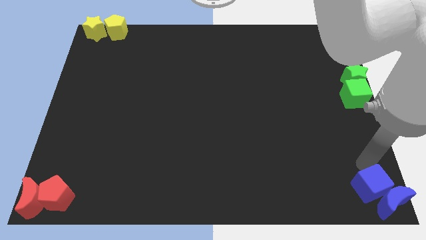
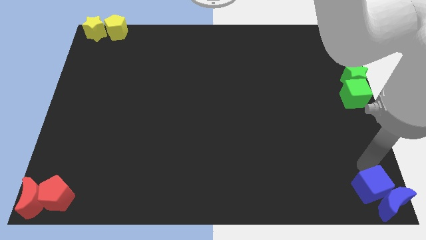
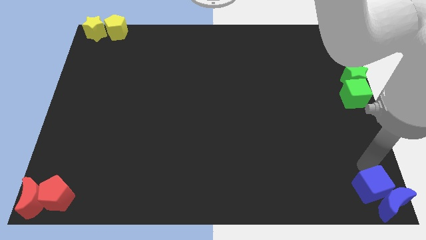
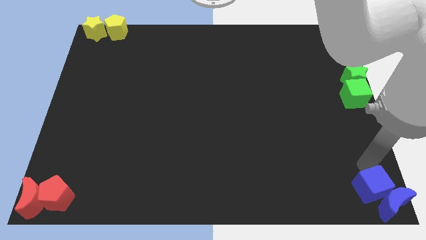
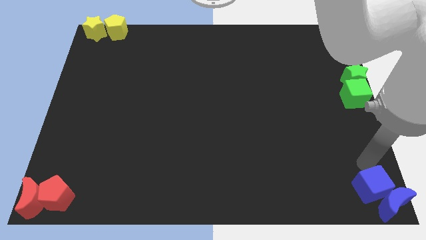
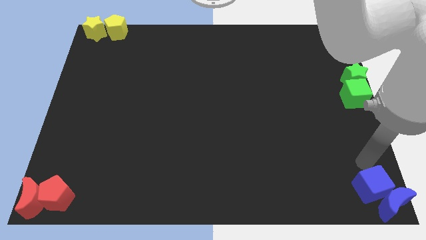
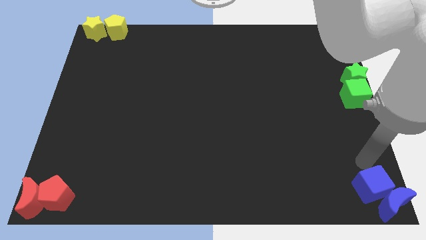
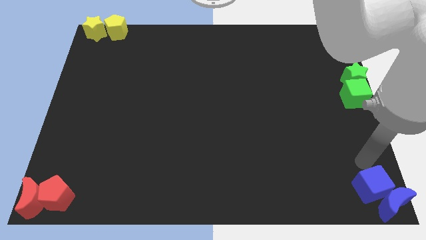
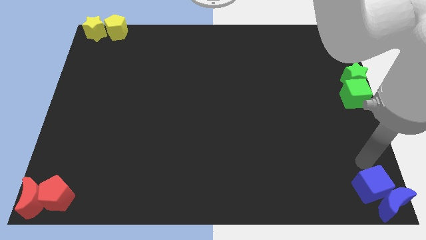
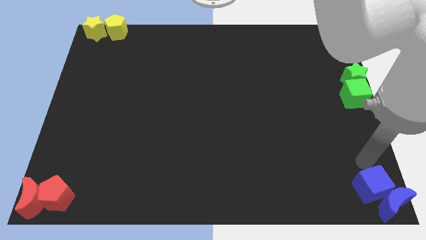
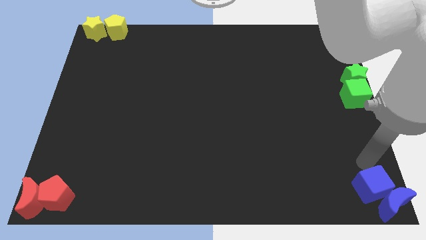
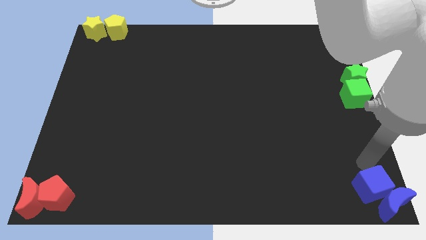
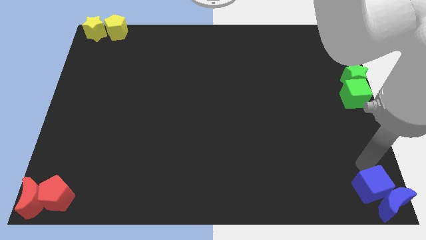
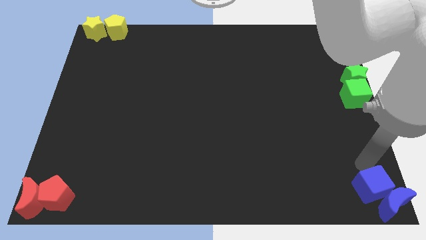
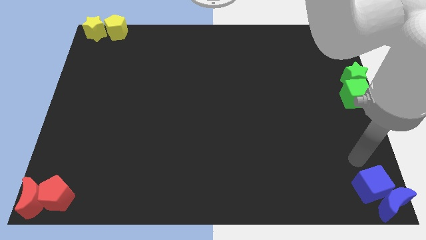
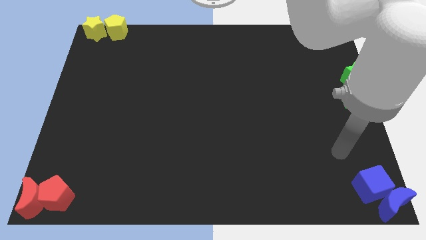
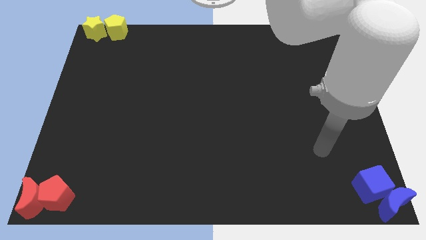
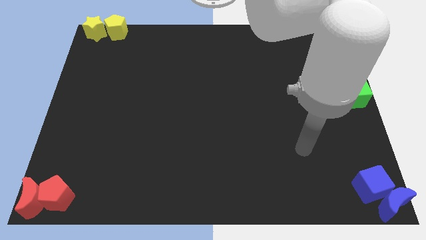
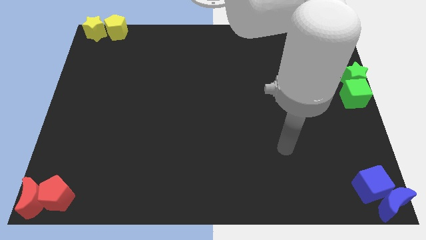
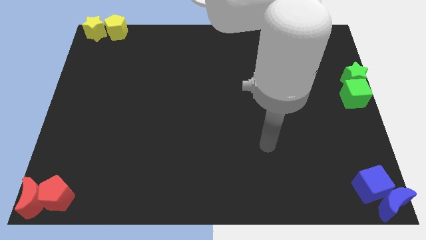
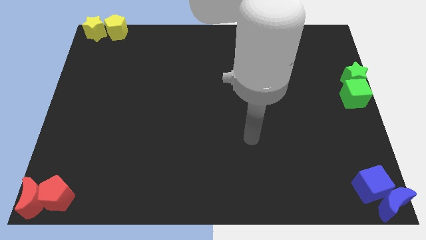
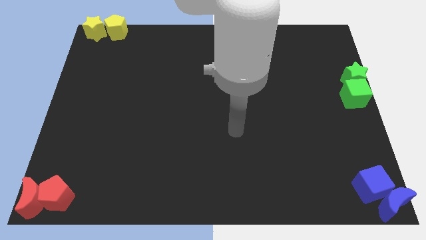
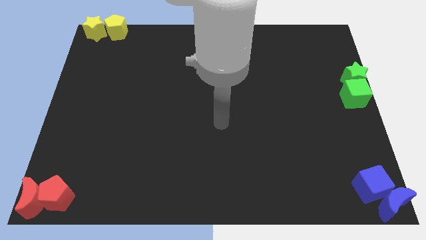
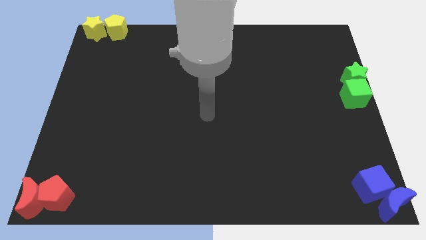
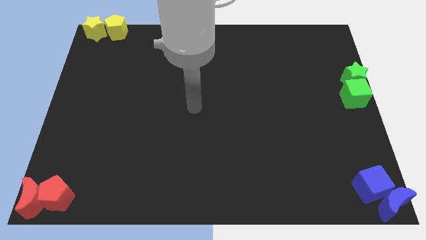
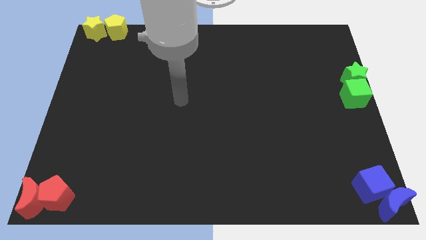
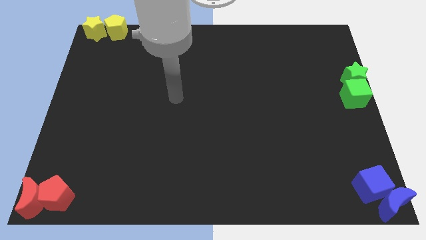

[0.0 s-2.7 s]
move your arm away from the blue blocks

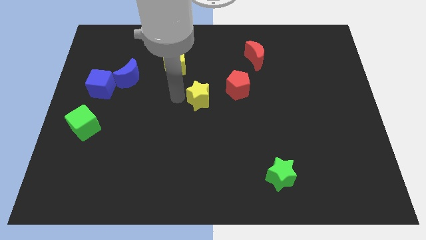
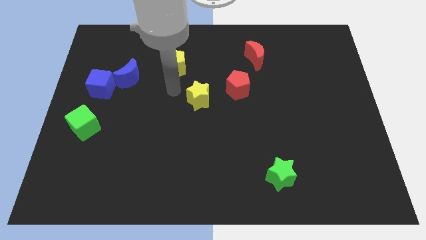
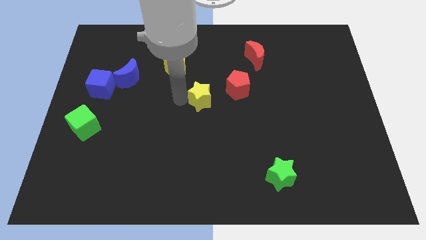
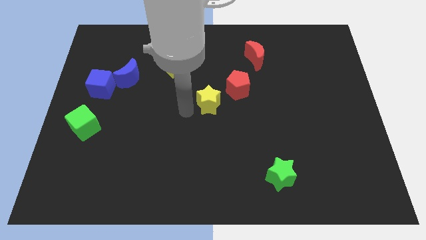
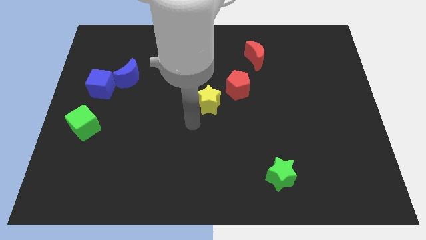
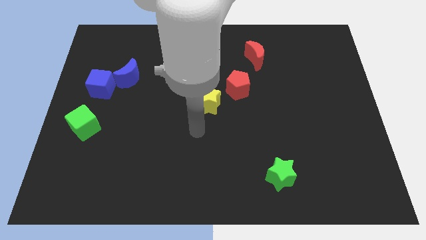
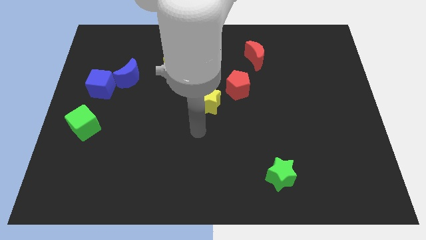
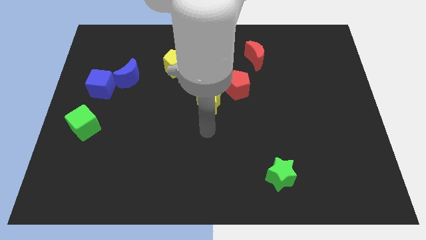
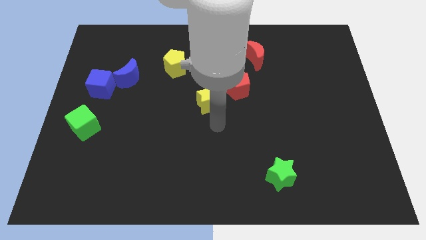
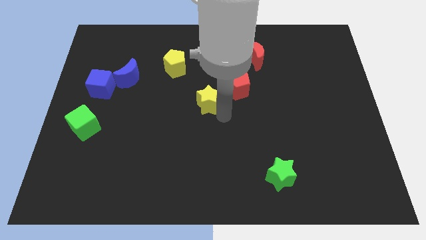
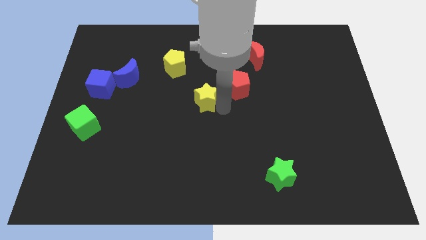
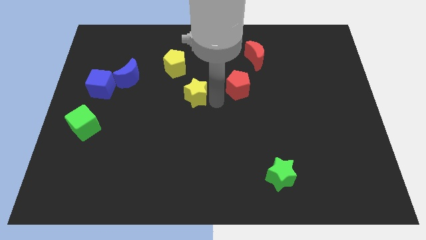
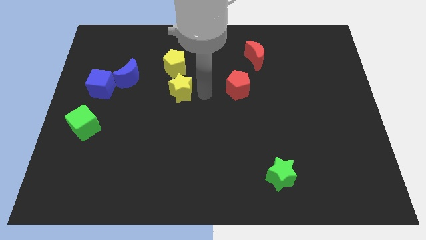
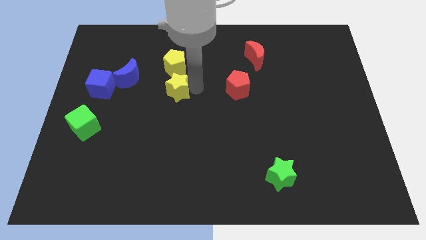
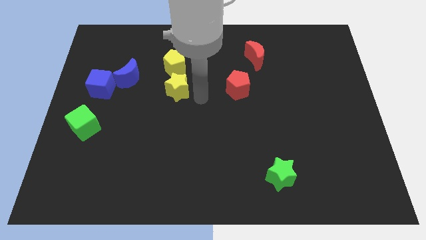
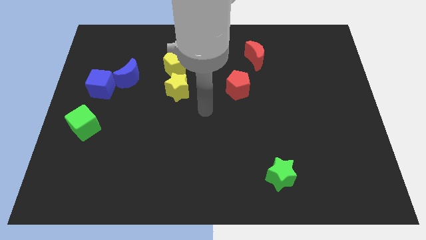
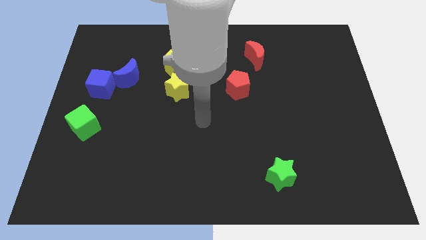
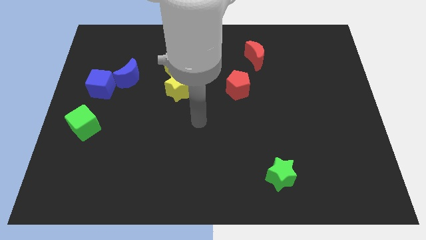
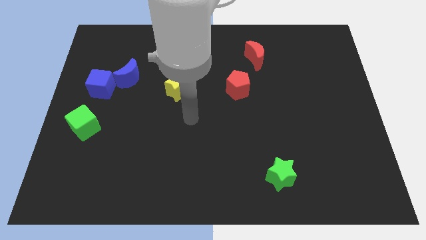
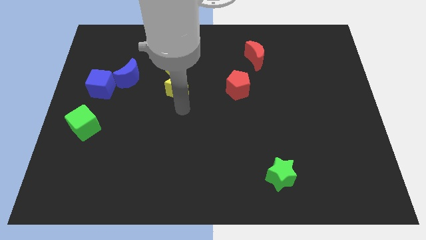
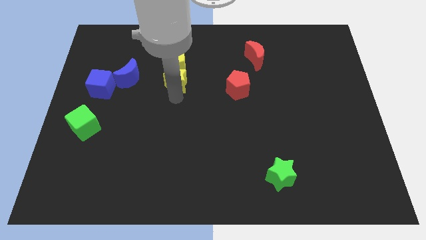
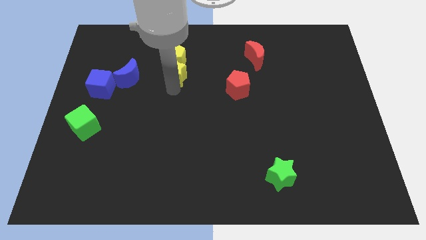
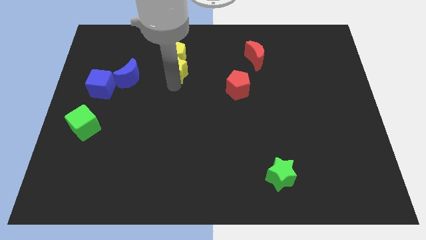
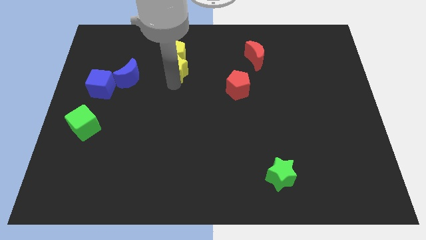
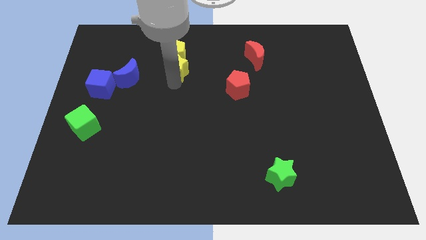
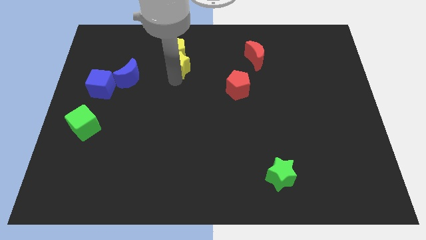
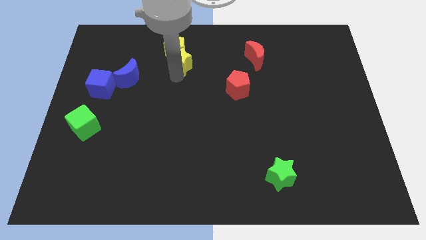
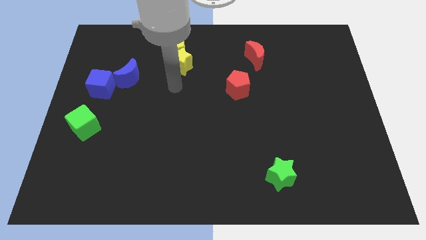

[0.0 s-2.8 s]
group up the two yellow blocks

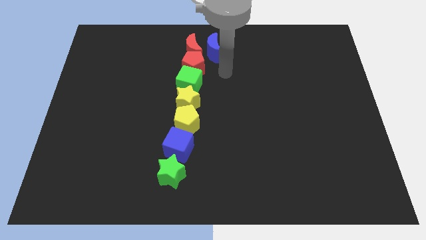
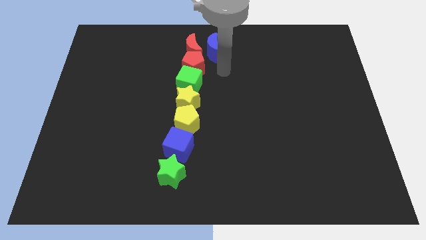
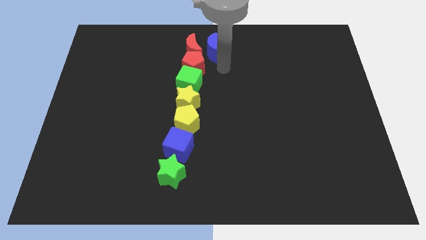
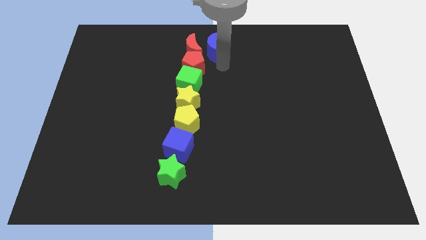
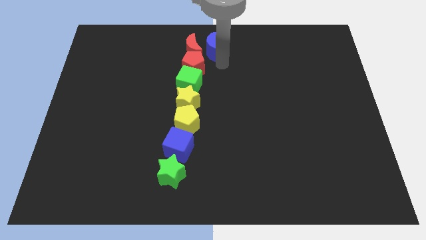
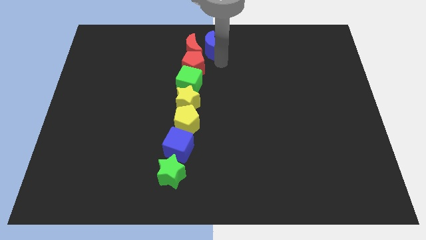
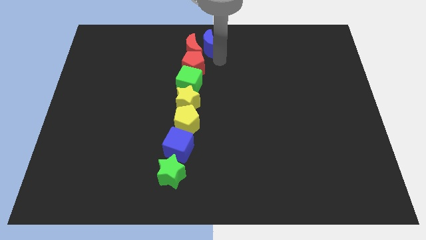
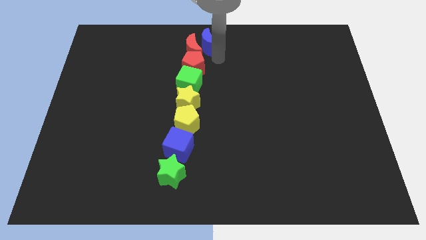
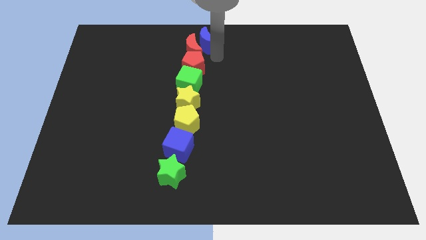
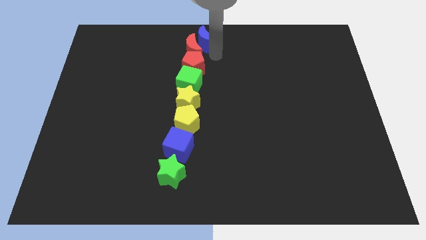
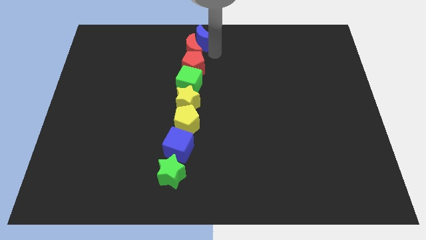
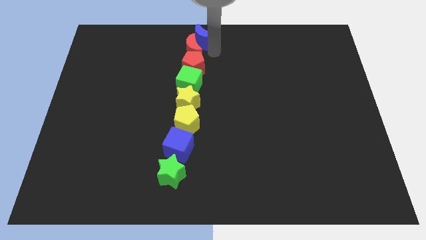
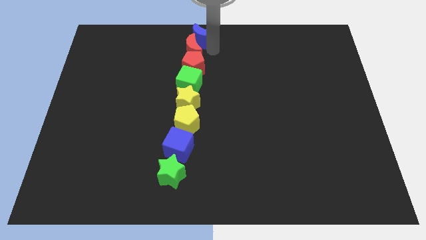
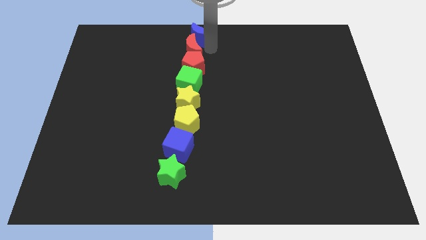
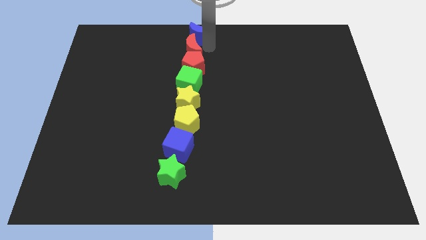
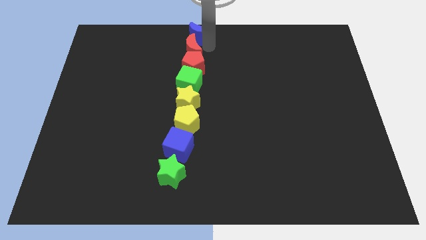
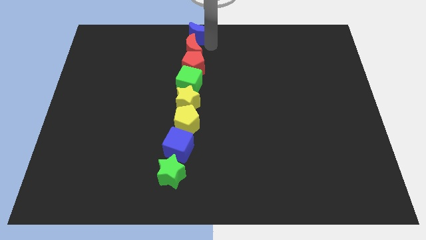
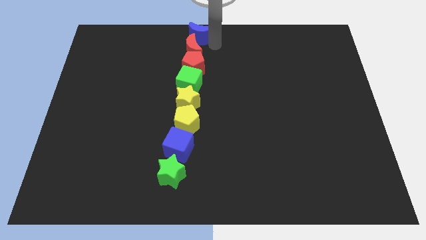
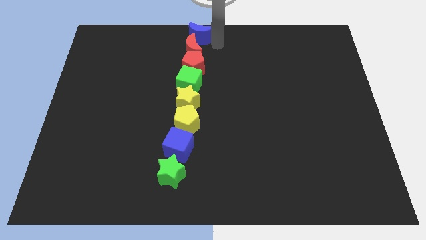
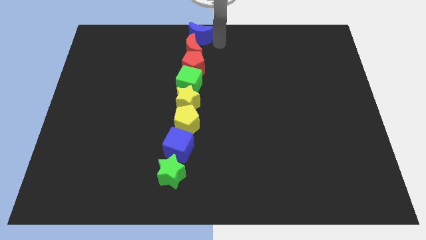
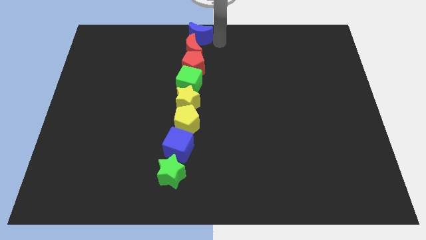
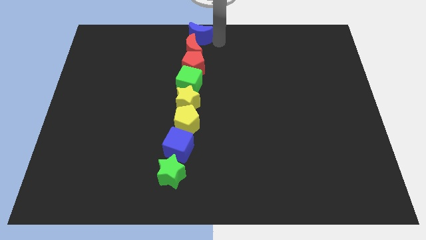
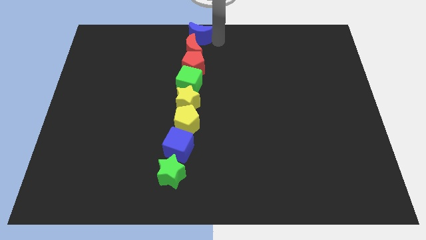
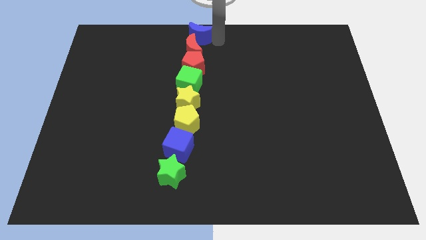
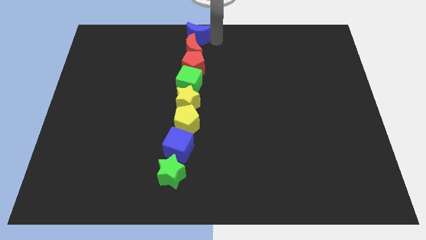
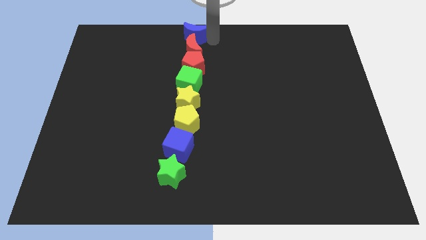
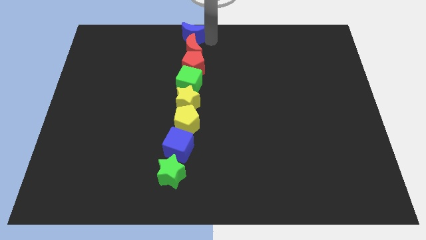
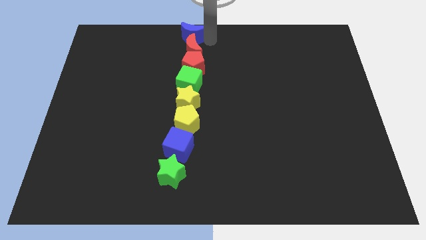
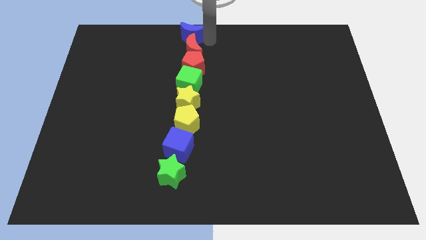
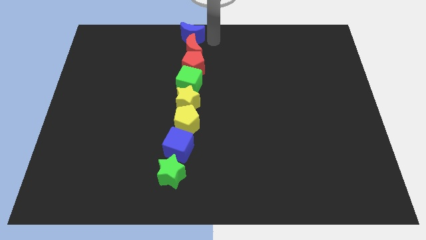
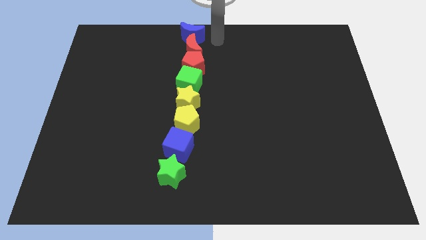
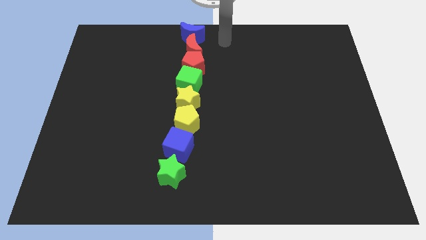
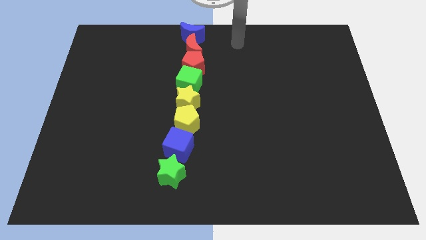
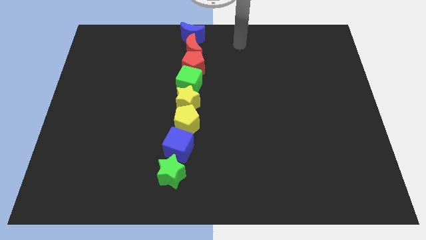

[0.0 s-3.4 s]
place the blue moon above the red moon

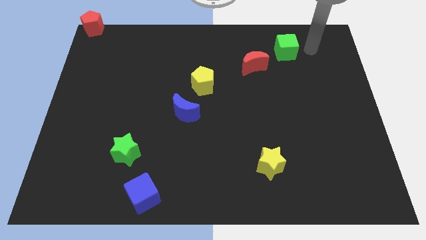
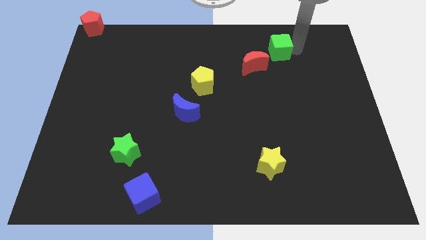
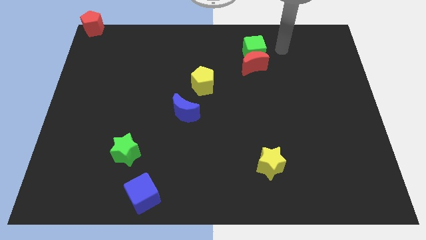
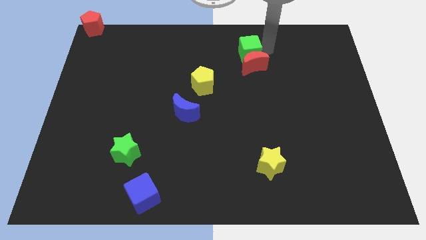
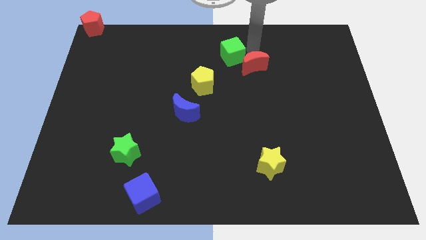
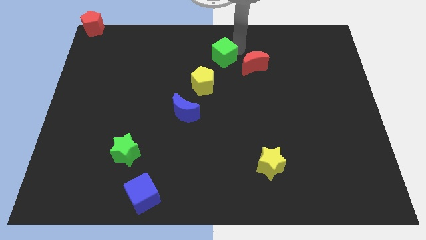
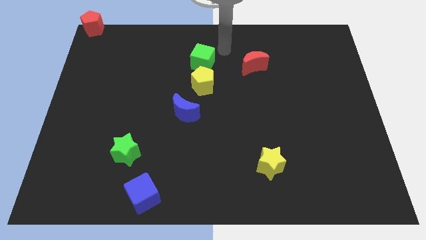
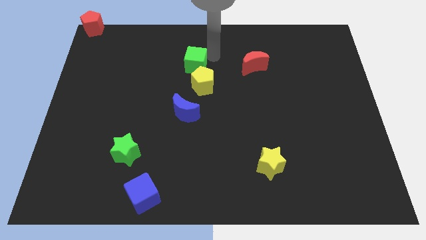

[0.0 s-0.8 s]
move the green cube above the yellow pentagon
